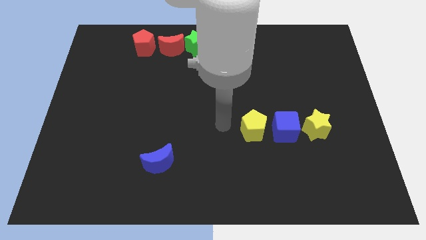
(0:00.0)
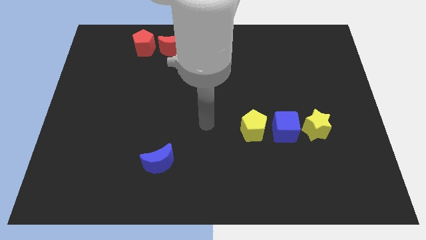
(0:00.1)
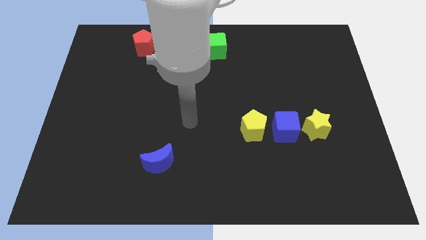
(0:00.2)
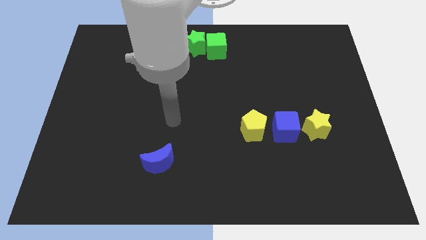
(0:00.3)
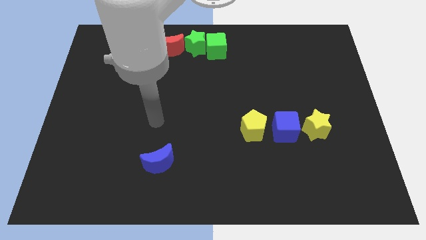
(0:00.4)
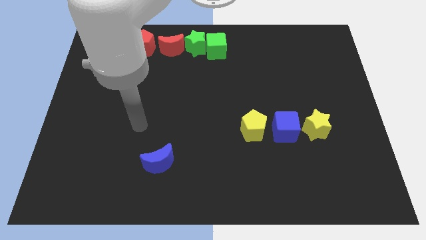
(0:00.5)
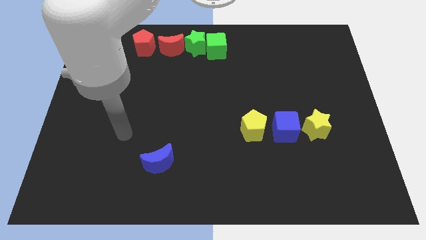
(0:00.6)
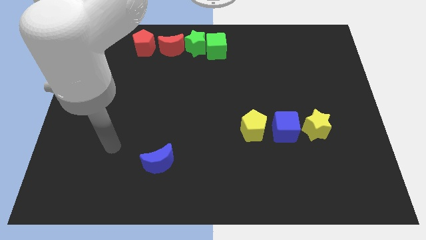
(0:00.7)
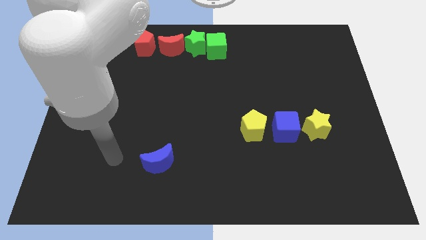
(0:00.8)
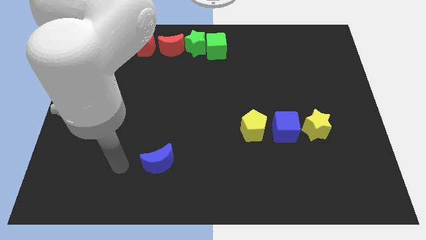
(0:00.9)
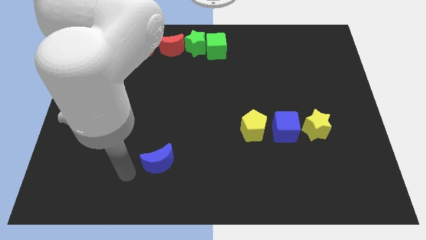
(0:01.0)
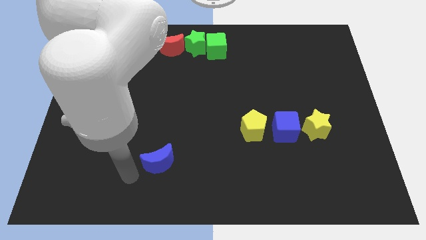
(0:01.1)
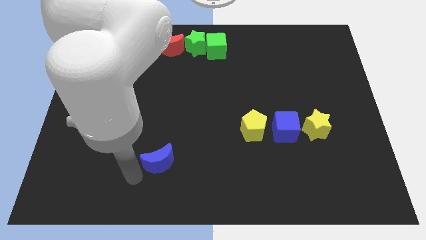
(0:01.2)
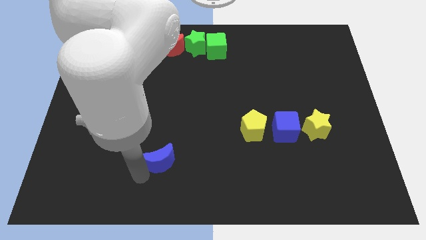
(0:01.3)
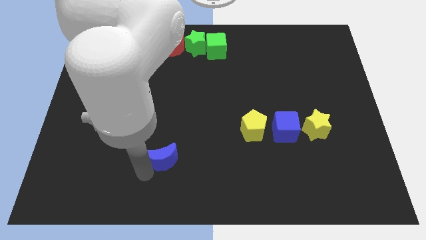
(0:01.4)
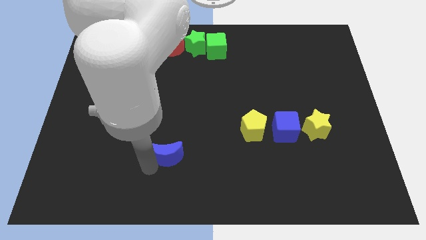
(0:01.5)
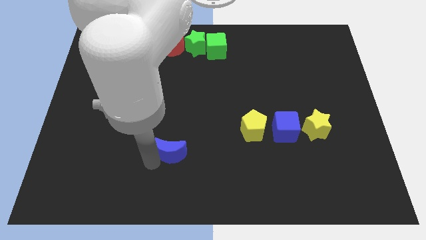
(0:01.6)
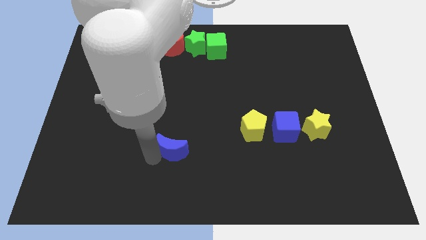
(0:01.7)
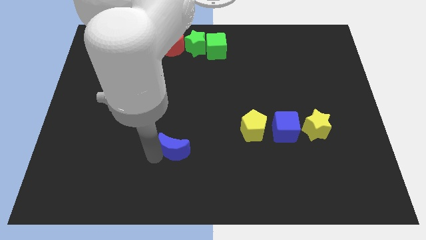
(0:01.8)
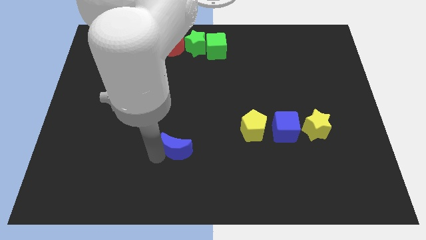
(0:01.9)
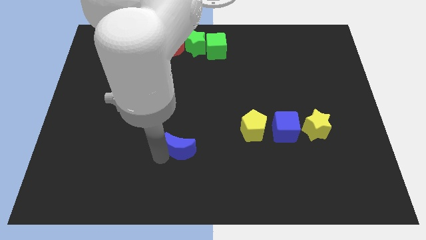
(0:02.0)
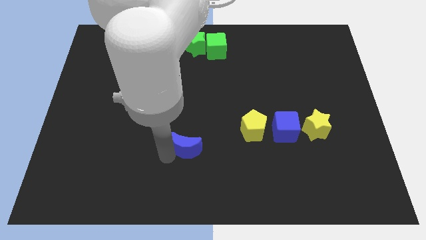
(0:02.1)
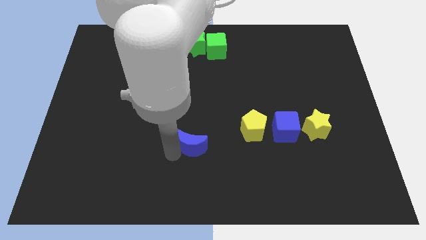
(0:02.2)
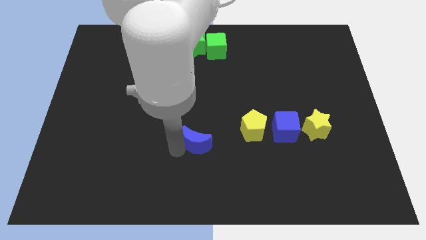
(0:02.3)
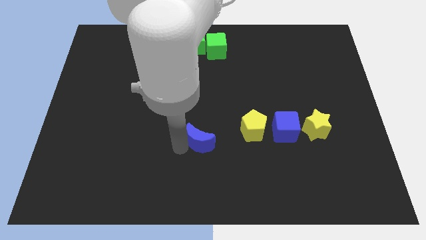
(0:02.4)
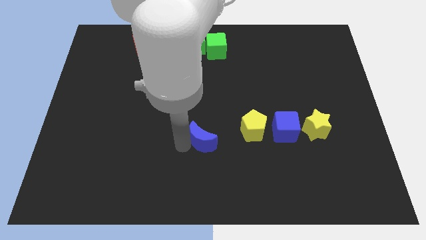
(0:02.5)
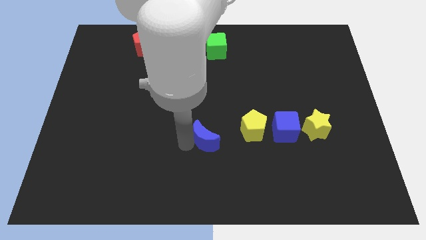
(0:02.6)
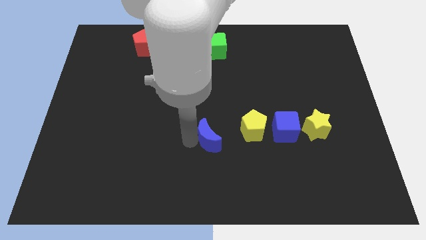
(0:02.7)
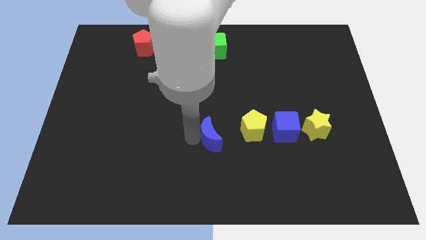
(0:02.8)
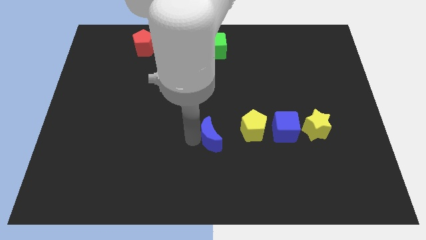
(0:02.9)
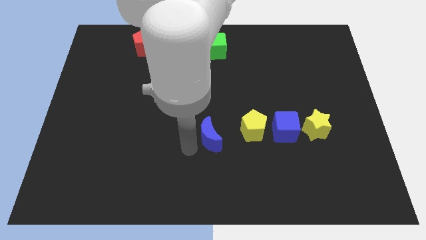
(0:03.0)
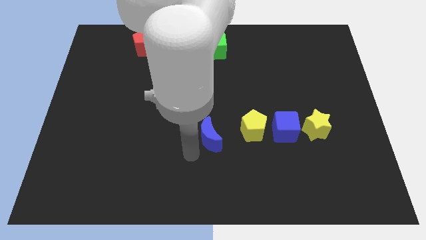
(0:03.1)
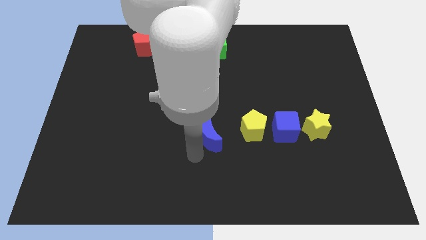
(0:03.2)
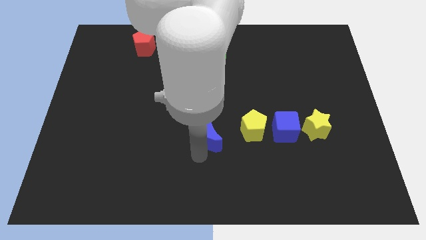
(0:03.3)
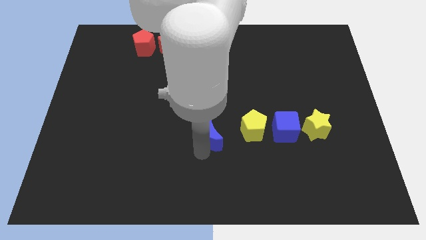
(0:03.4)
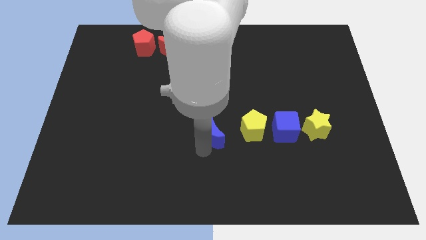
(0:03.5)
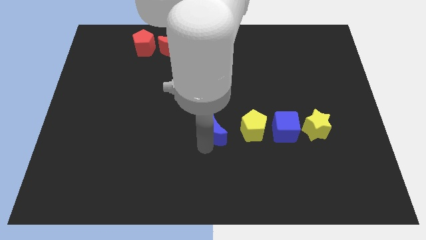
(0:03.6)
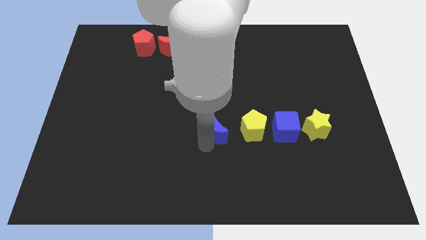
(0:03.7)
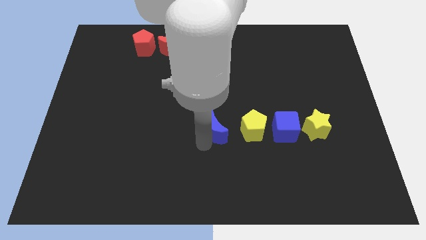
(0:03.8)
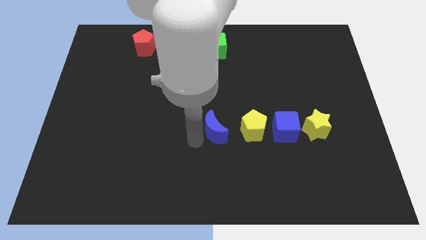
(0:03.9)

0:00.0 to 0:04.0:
place the blue crescent at left side of the yellow pentagon

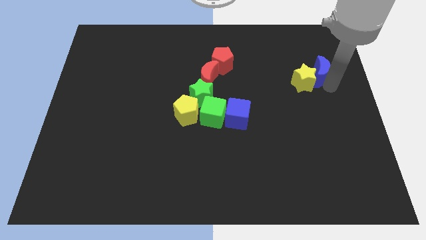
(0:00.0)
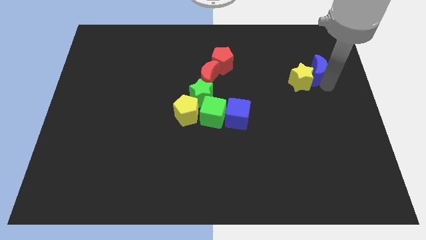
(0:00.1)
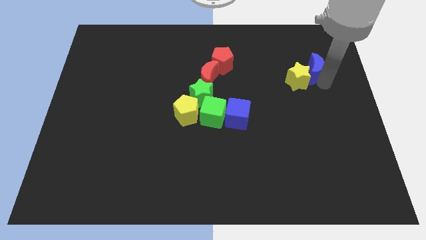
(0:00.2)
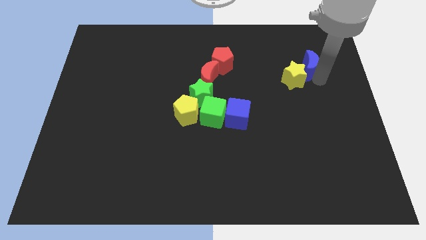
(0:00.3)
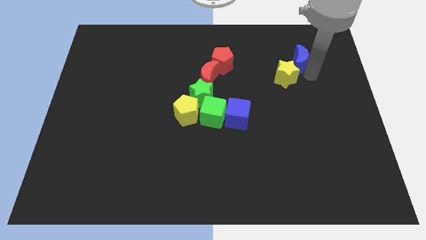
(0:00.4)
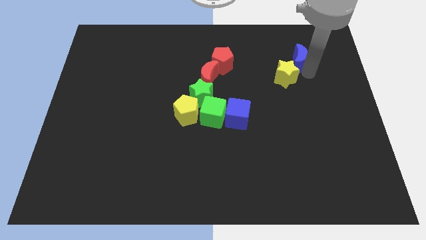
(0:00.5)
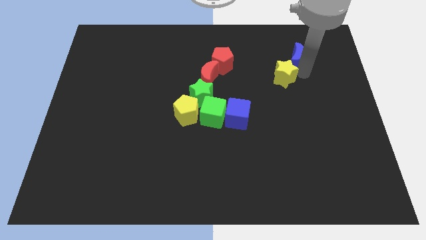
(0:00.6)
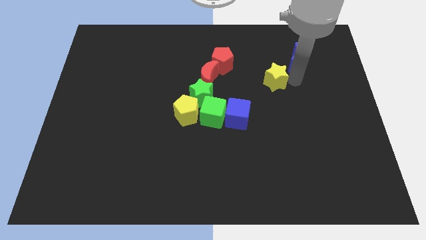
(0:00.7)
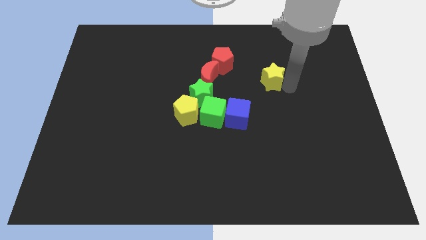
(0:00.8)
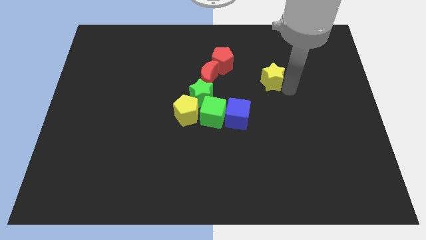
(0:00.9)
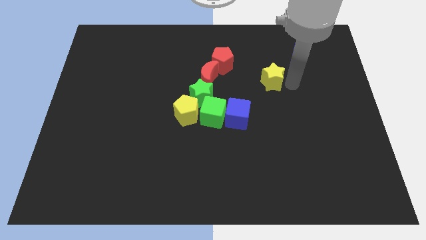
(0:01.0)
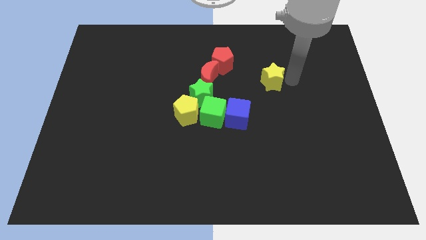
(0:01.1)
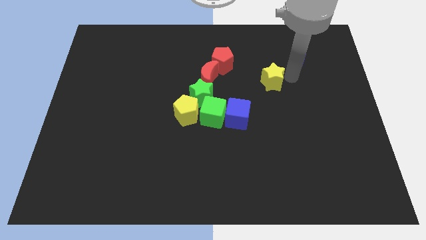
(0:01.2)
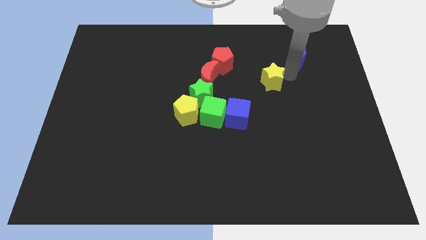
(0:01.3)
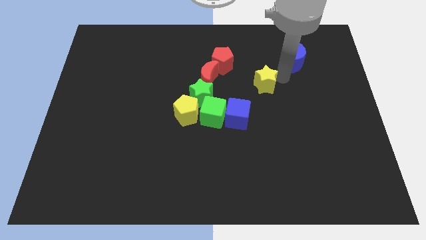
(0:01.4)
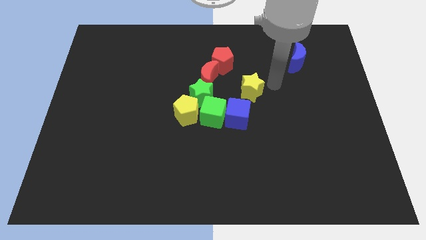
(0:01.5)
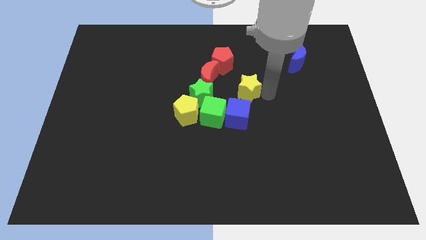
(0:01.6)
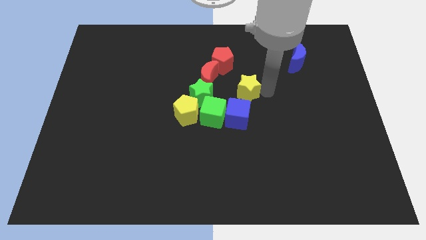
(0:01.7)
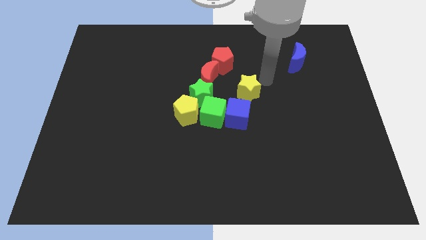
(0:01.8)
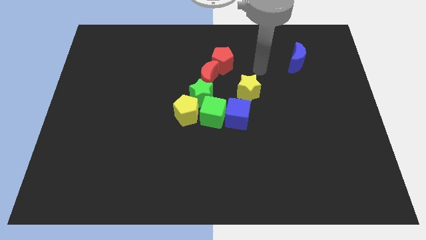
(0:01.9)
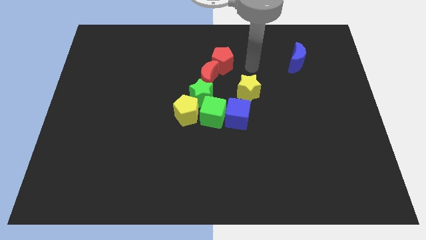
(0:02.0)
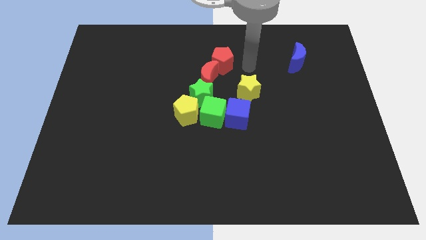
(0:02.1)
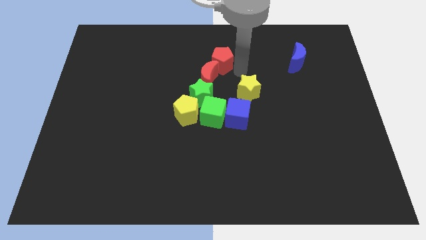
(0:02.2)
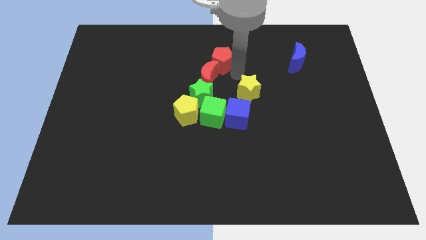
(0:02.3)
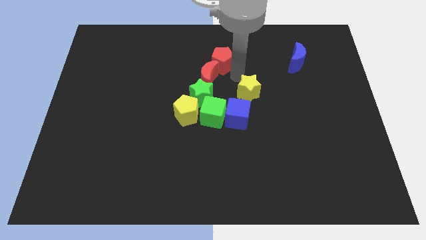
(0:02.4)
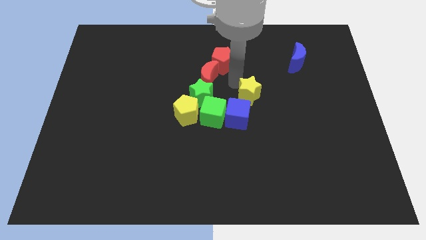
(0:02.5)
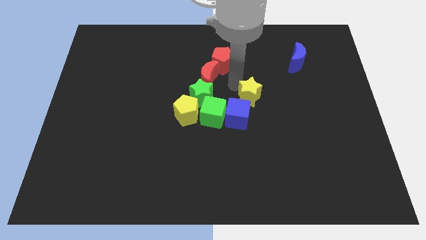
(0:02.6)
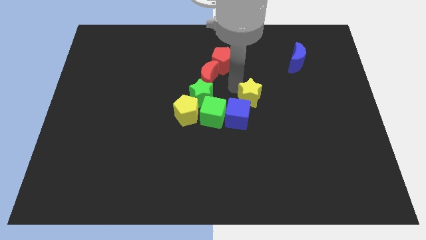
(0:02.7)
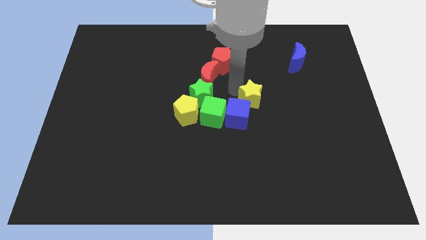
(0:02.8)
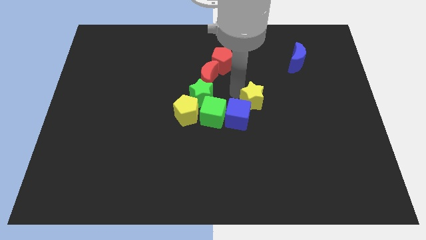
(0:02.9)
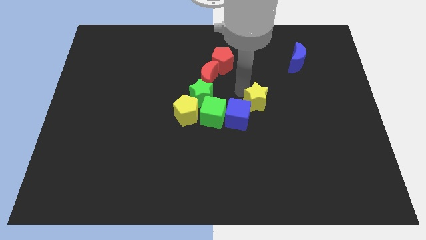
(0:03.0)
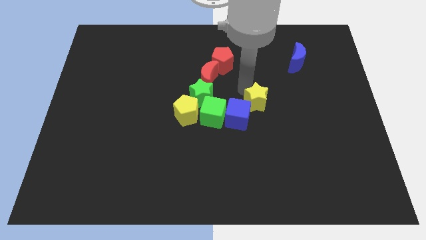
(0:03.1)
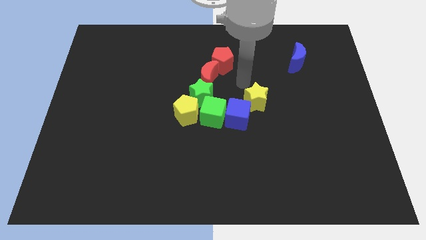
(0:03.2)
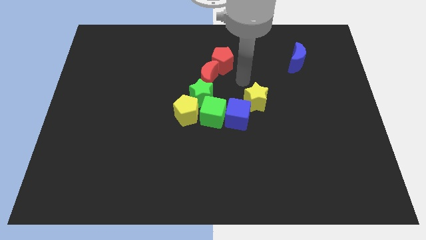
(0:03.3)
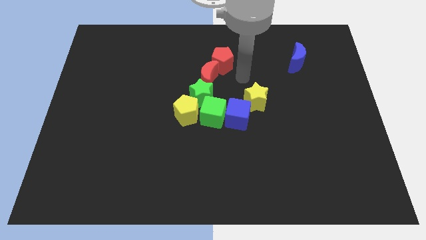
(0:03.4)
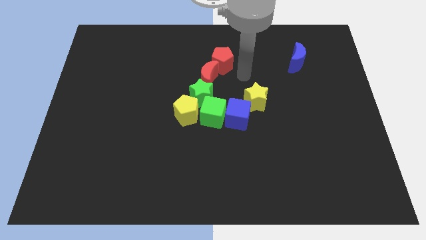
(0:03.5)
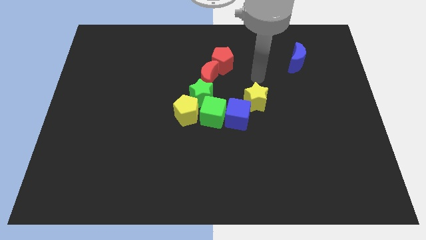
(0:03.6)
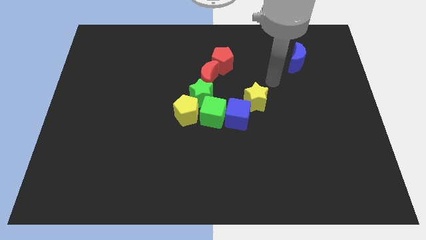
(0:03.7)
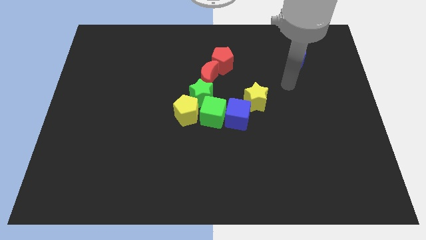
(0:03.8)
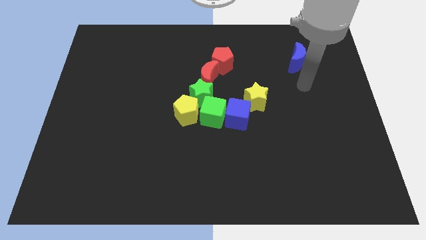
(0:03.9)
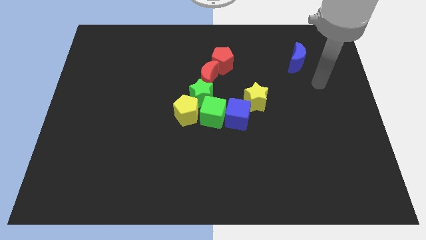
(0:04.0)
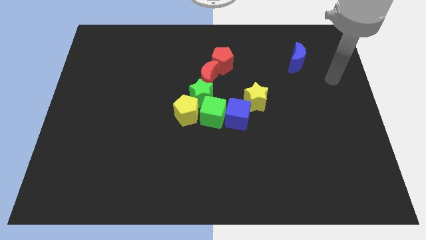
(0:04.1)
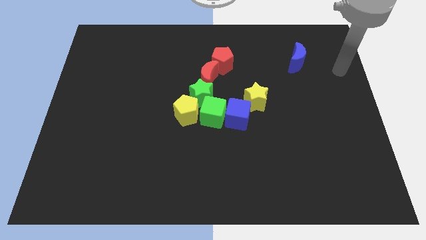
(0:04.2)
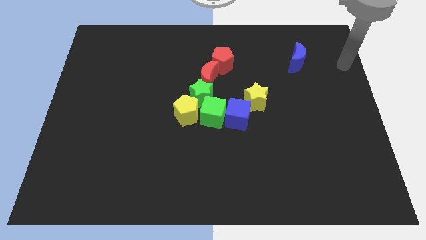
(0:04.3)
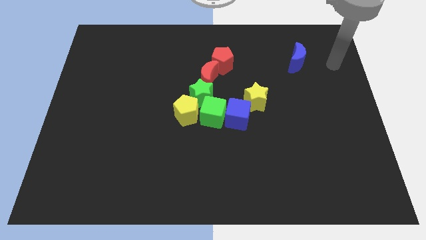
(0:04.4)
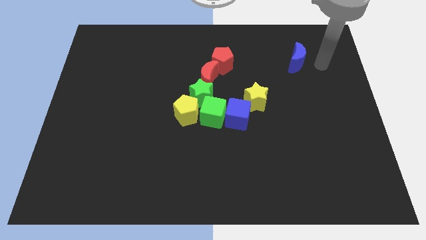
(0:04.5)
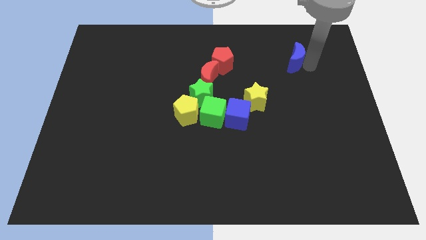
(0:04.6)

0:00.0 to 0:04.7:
place the yellow star to the top right side of the blue cube

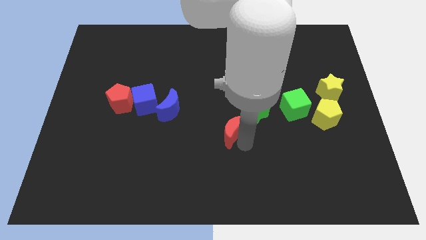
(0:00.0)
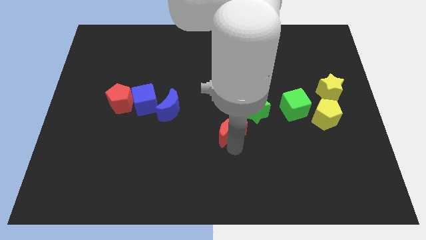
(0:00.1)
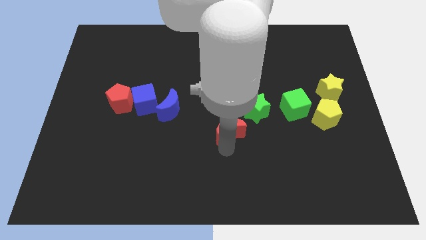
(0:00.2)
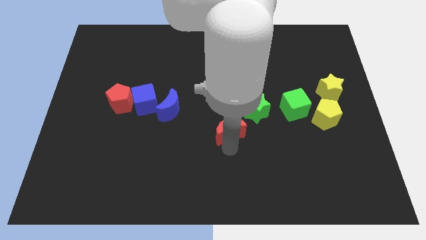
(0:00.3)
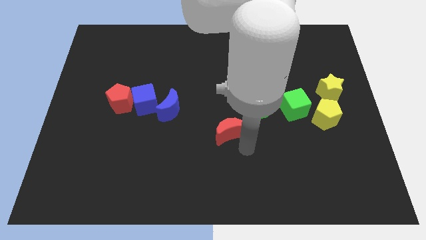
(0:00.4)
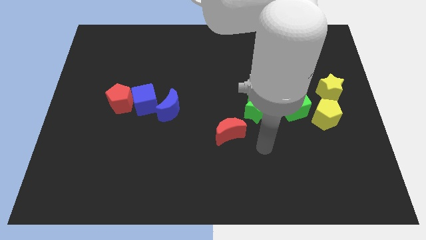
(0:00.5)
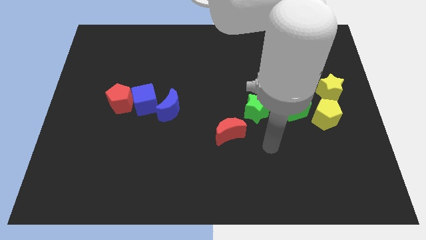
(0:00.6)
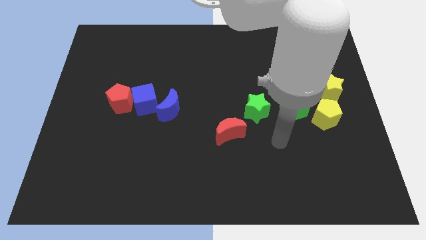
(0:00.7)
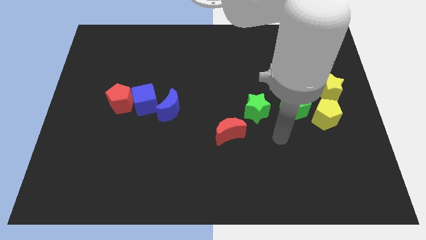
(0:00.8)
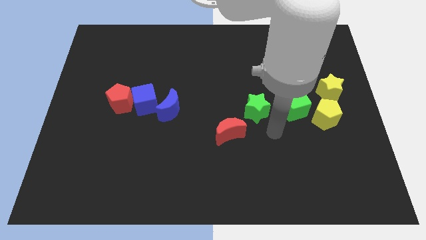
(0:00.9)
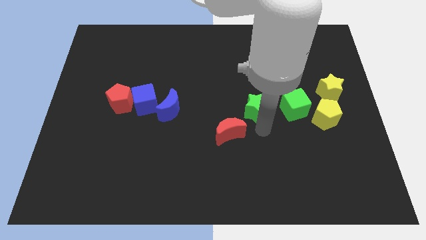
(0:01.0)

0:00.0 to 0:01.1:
separate green star and red moon from each other
